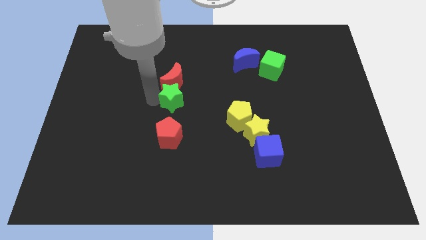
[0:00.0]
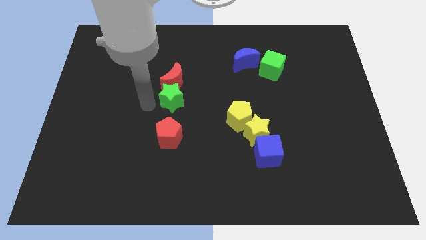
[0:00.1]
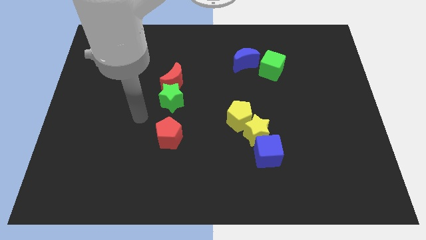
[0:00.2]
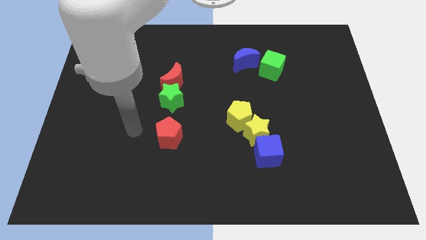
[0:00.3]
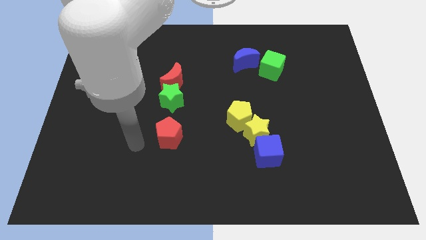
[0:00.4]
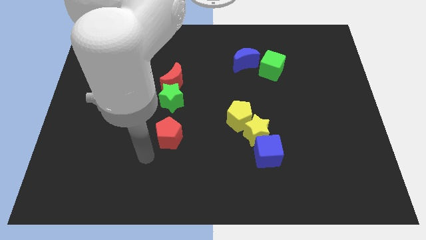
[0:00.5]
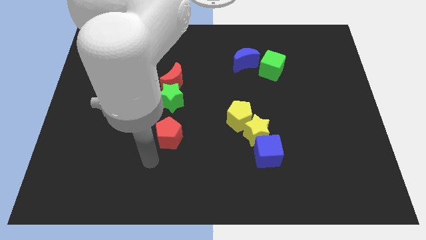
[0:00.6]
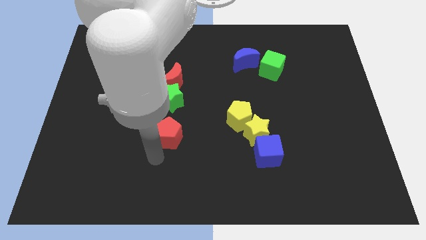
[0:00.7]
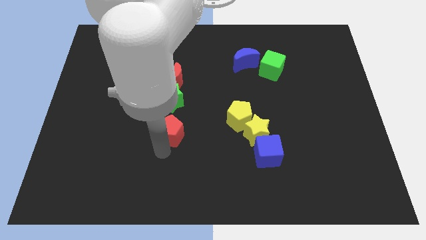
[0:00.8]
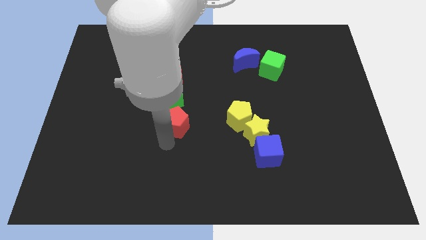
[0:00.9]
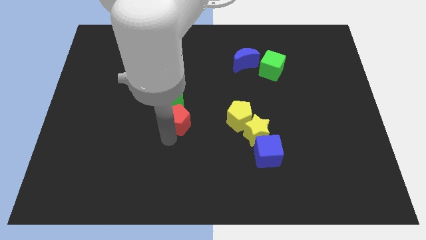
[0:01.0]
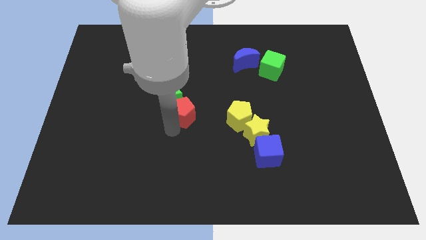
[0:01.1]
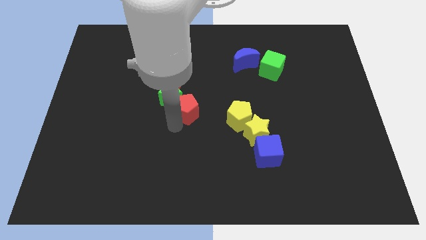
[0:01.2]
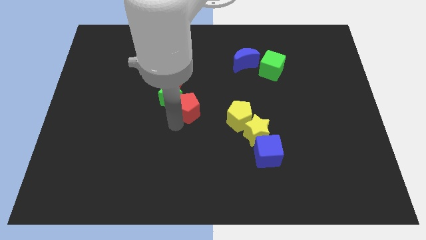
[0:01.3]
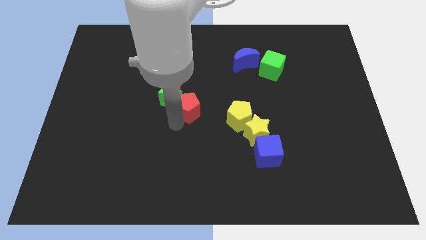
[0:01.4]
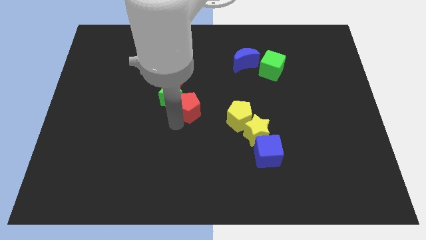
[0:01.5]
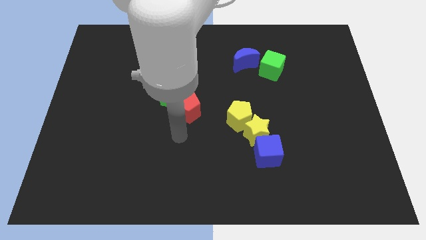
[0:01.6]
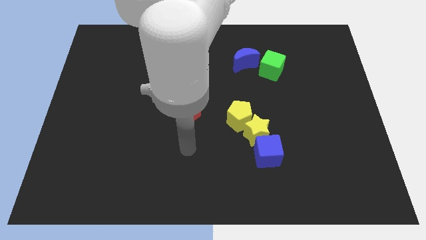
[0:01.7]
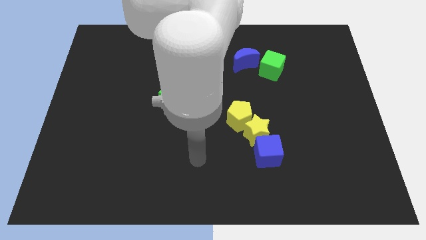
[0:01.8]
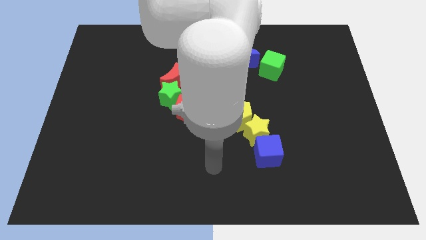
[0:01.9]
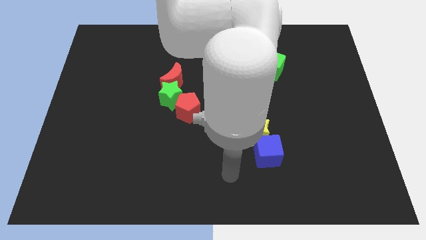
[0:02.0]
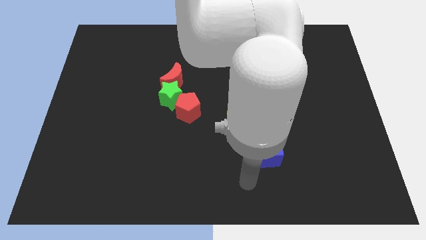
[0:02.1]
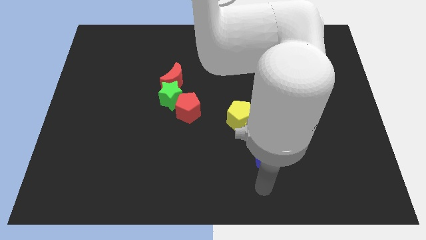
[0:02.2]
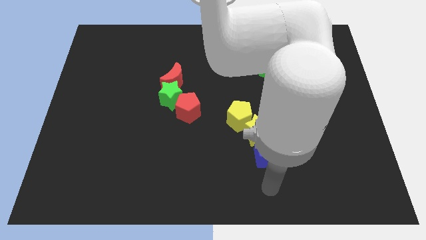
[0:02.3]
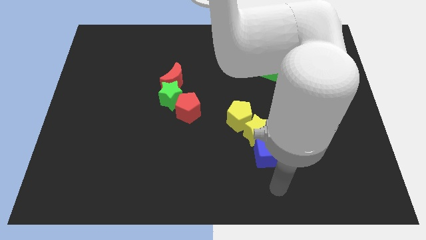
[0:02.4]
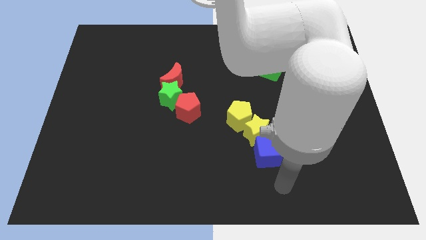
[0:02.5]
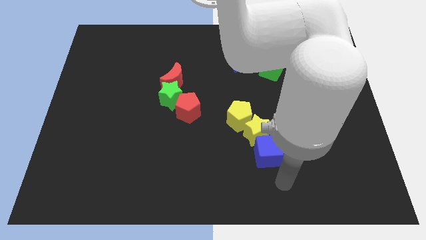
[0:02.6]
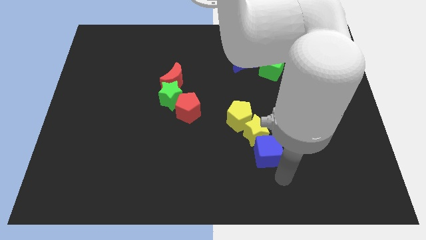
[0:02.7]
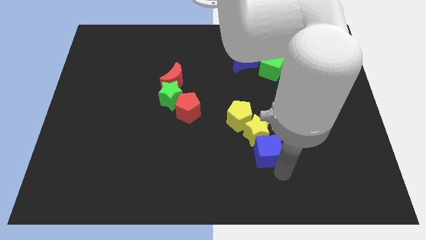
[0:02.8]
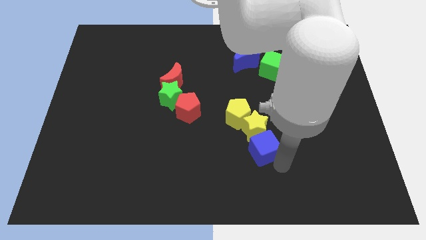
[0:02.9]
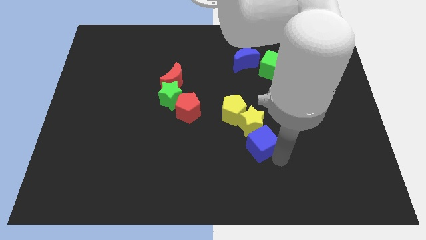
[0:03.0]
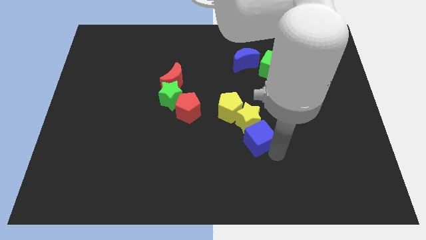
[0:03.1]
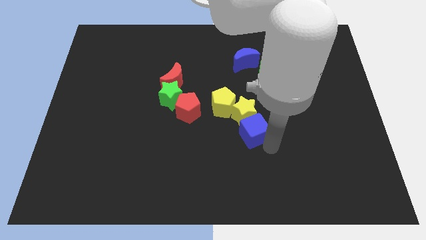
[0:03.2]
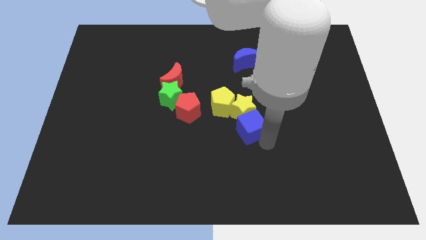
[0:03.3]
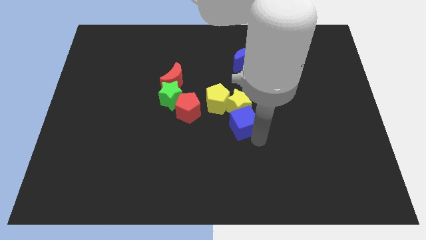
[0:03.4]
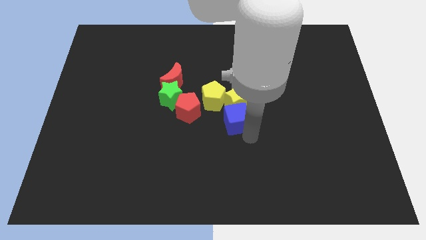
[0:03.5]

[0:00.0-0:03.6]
move the group of blocks to the center of the board

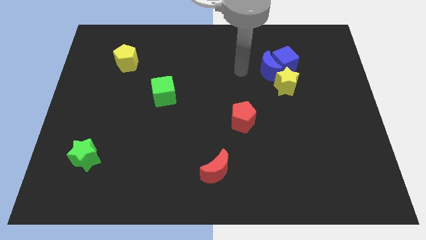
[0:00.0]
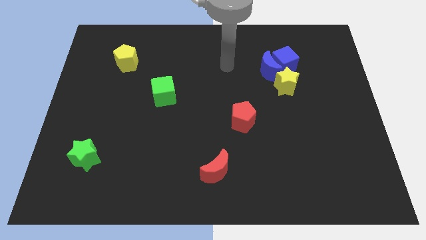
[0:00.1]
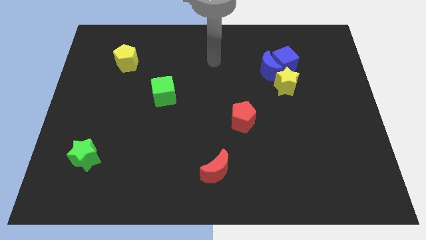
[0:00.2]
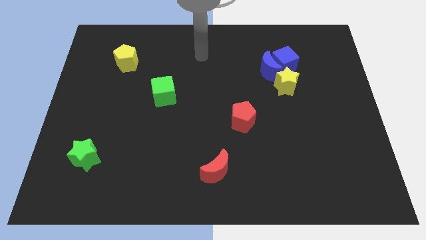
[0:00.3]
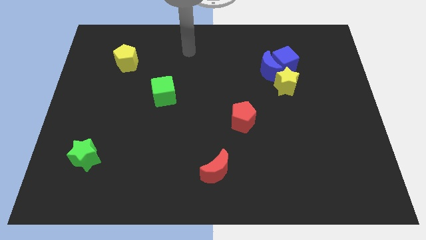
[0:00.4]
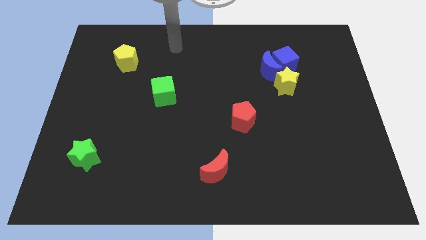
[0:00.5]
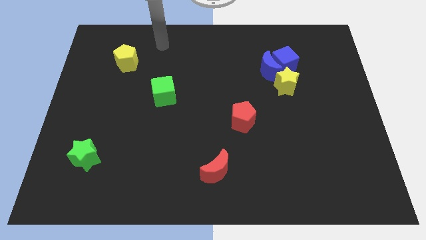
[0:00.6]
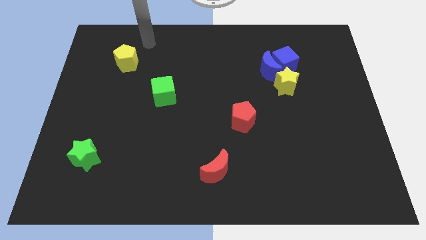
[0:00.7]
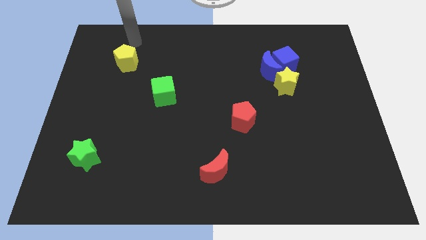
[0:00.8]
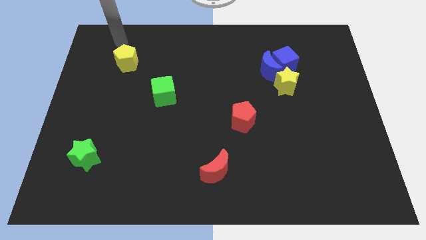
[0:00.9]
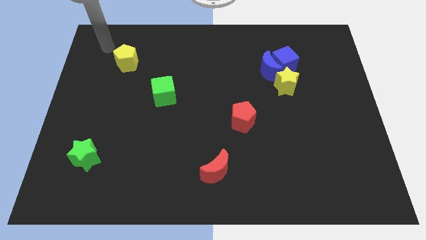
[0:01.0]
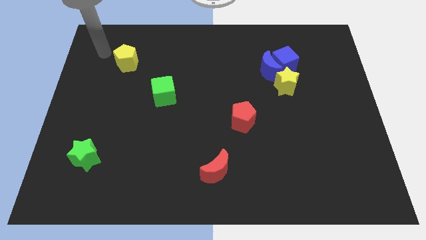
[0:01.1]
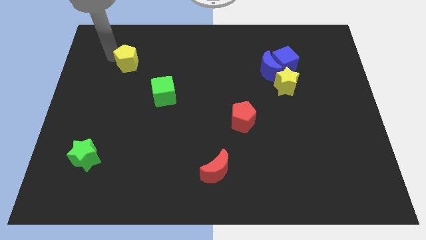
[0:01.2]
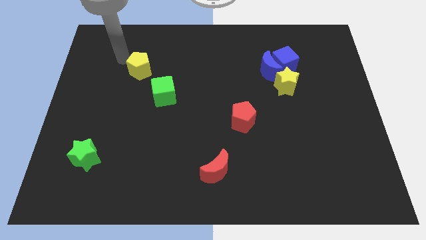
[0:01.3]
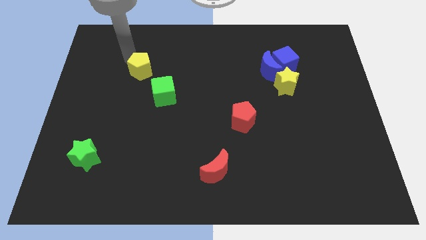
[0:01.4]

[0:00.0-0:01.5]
slightly push the yellow pentagon towards green cube

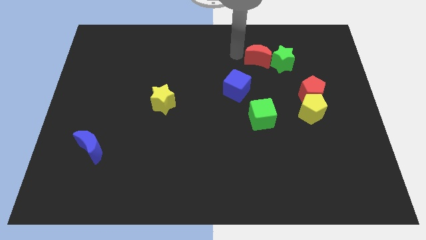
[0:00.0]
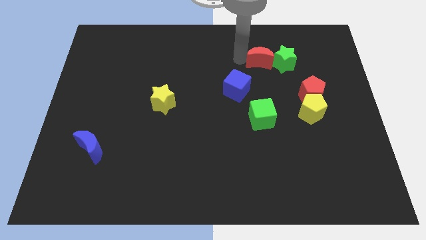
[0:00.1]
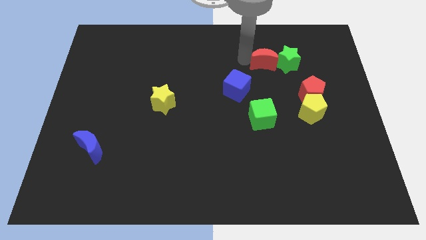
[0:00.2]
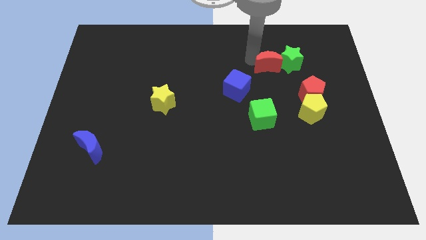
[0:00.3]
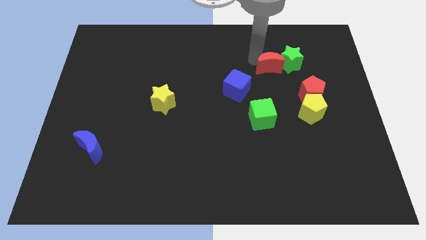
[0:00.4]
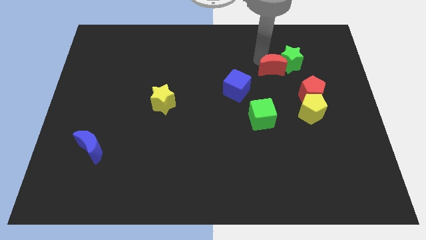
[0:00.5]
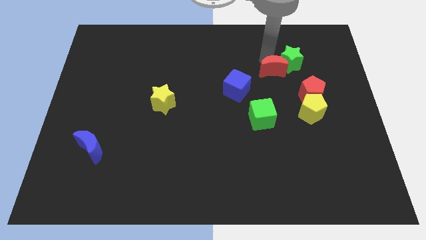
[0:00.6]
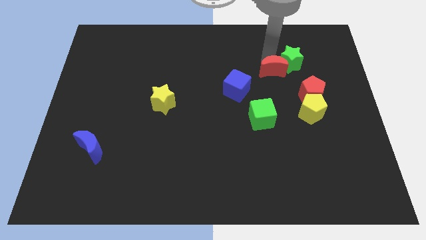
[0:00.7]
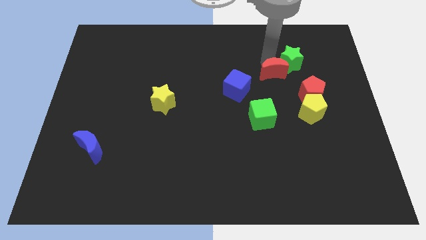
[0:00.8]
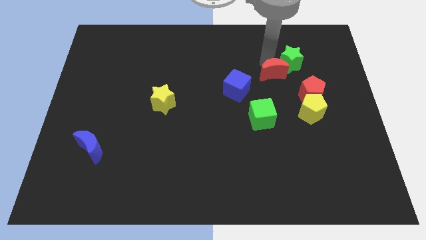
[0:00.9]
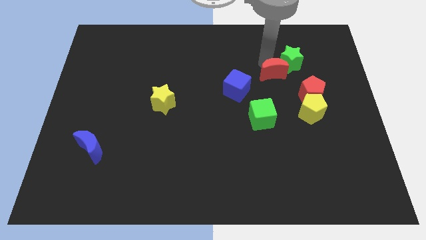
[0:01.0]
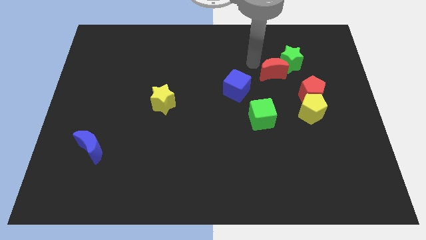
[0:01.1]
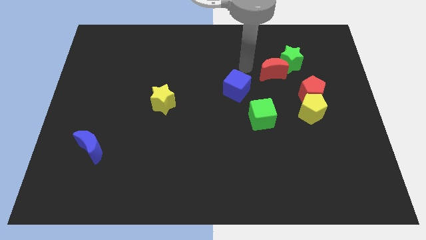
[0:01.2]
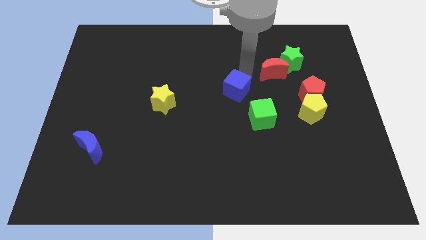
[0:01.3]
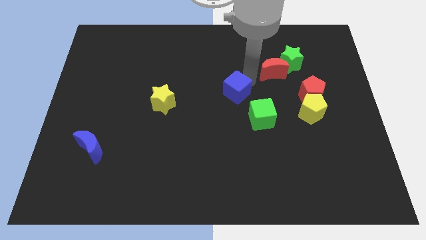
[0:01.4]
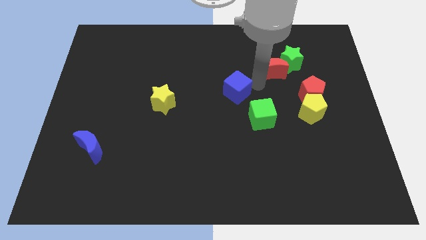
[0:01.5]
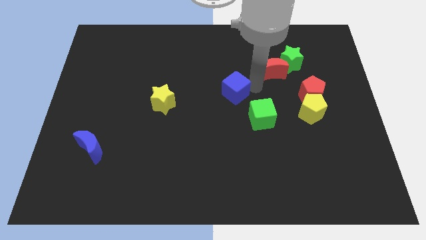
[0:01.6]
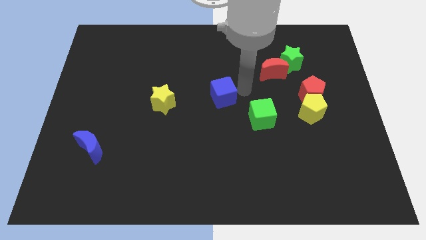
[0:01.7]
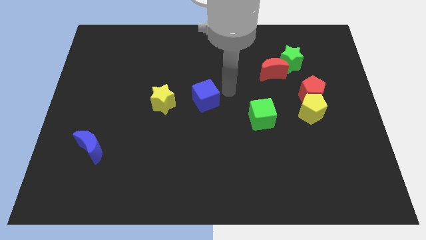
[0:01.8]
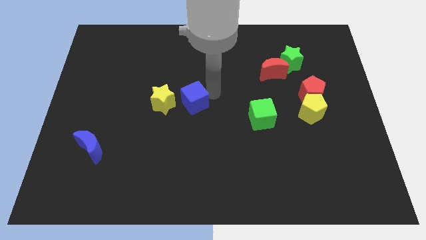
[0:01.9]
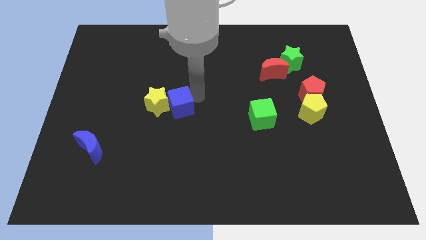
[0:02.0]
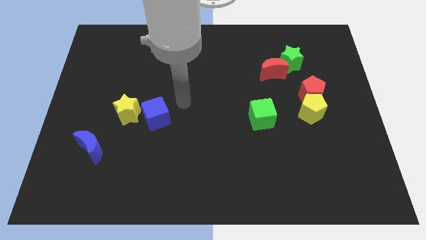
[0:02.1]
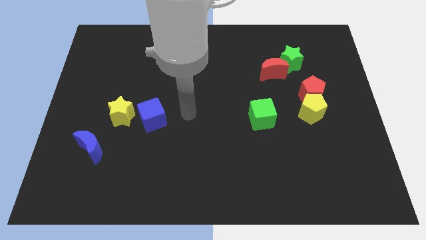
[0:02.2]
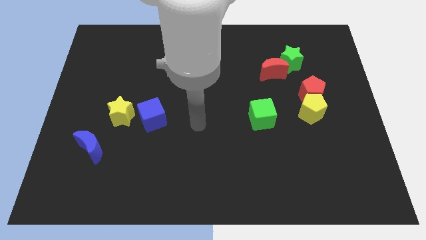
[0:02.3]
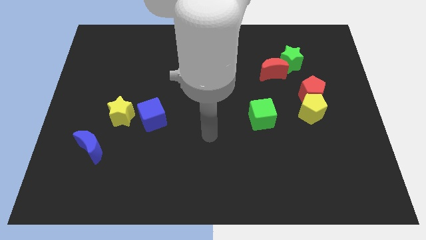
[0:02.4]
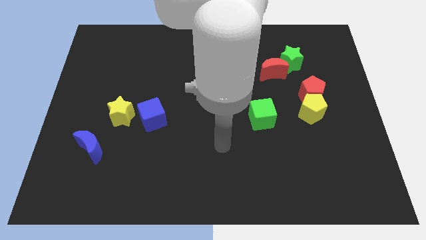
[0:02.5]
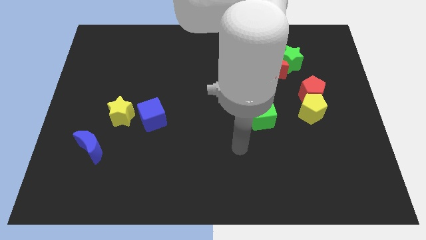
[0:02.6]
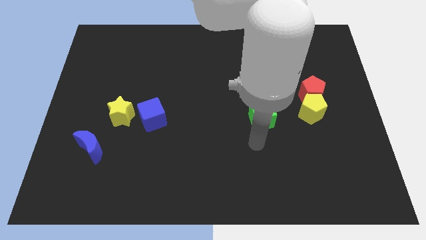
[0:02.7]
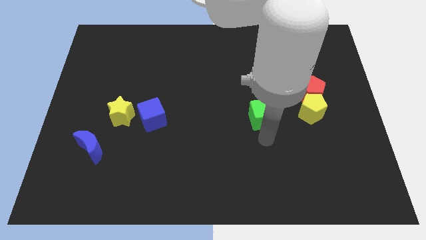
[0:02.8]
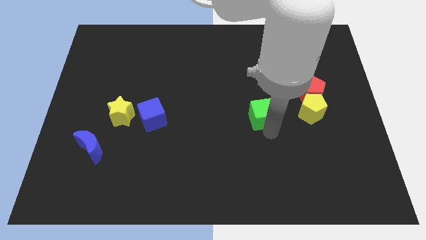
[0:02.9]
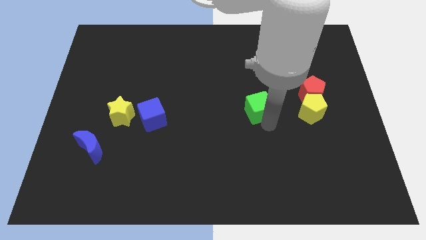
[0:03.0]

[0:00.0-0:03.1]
place the blue cube and yellow star diagonally to blue moon

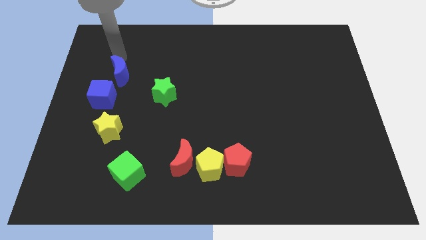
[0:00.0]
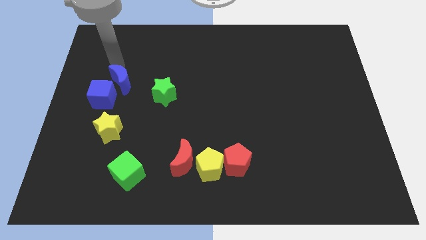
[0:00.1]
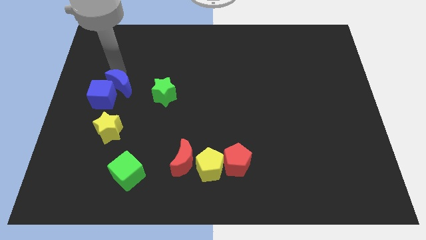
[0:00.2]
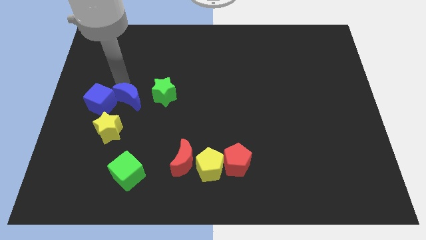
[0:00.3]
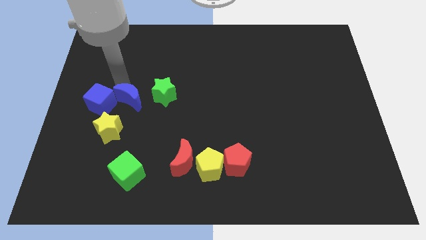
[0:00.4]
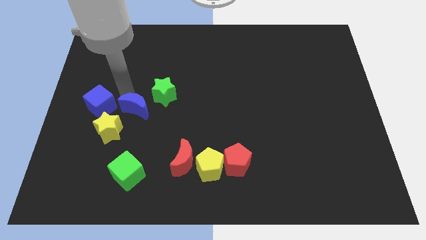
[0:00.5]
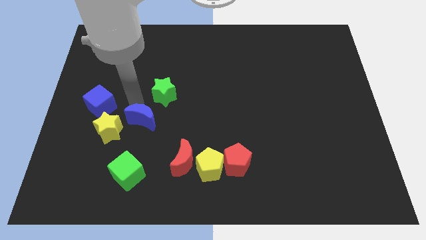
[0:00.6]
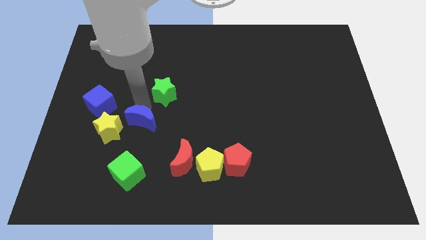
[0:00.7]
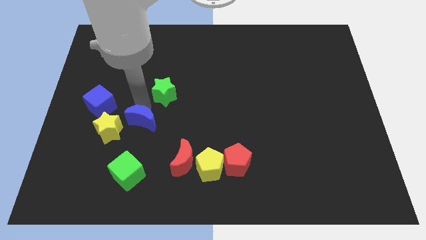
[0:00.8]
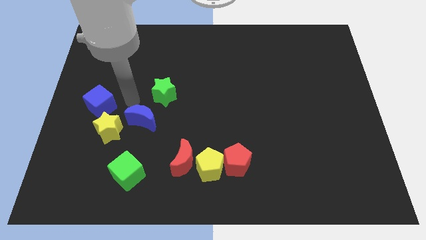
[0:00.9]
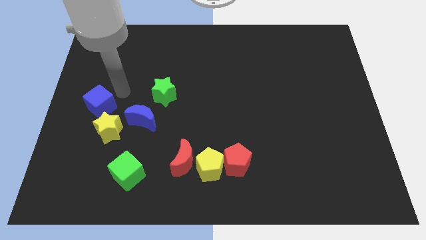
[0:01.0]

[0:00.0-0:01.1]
push the blue crescent below the green star
